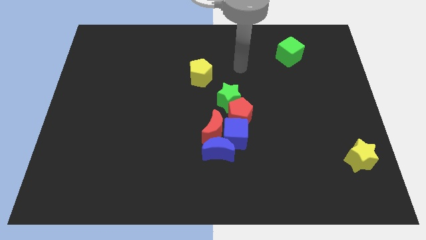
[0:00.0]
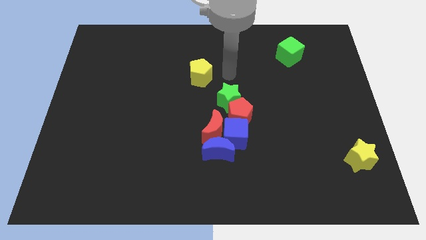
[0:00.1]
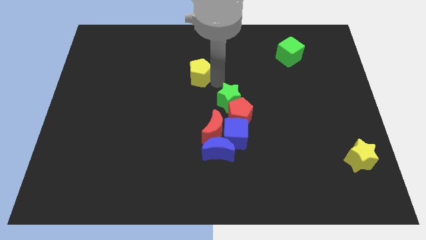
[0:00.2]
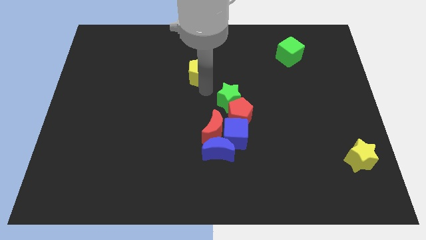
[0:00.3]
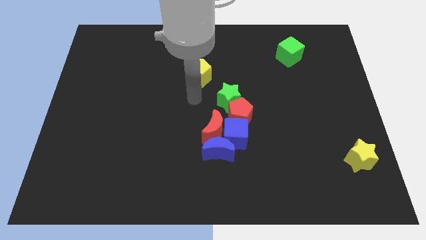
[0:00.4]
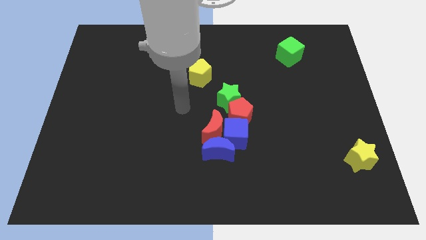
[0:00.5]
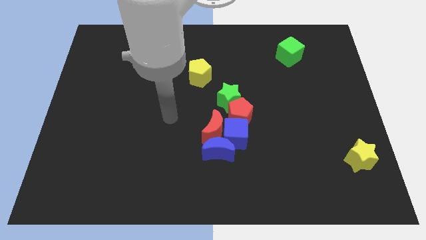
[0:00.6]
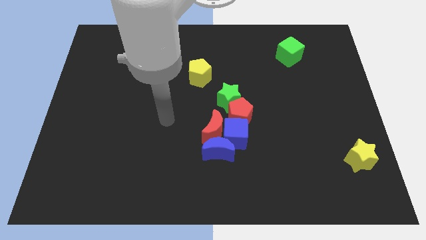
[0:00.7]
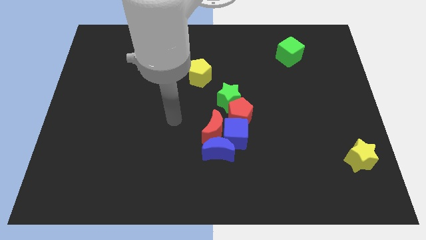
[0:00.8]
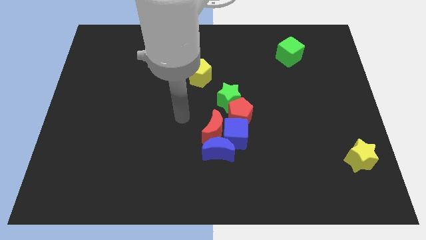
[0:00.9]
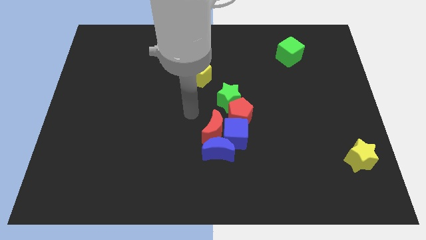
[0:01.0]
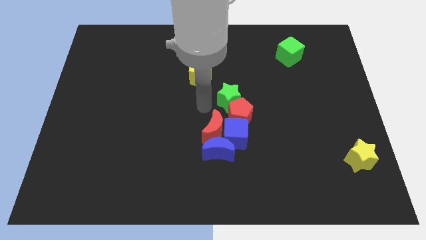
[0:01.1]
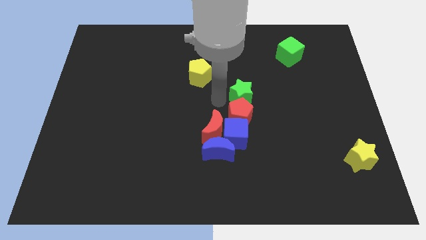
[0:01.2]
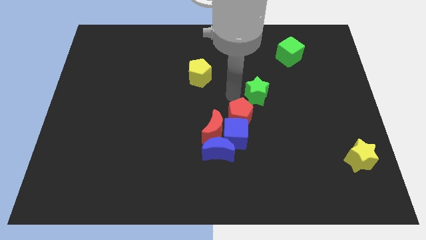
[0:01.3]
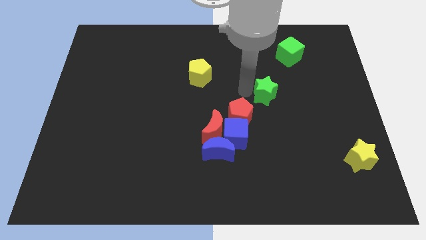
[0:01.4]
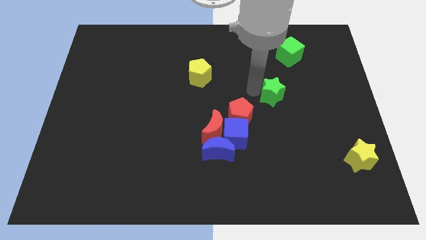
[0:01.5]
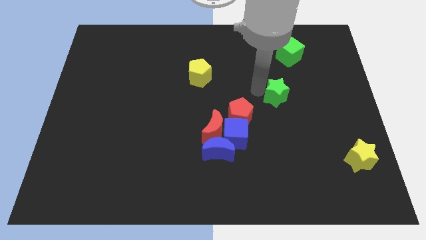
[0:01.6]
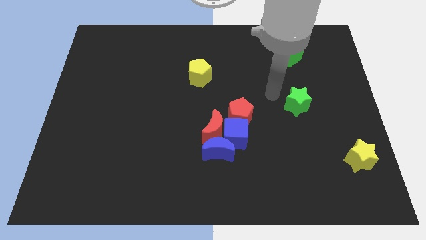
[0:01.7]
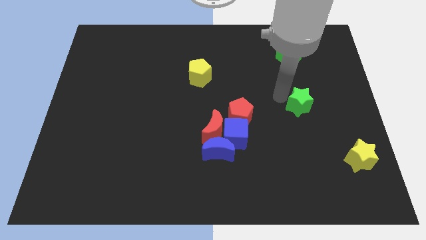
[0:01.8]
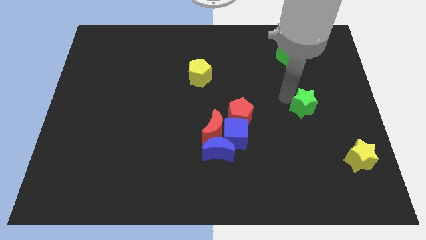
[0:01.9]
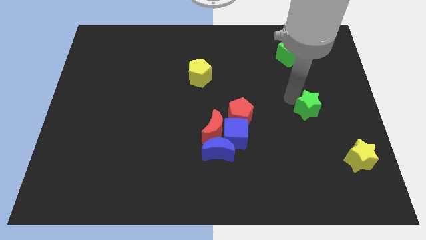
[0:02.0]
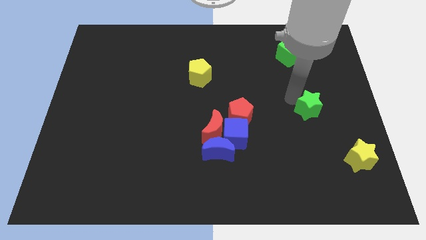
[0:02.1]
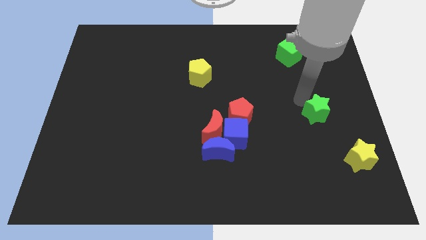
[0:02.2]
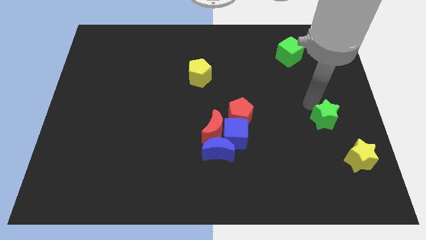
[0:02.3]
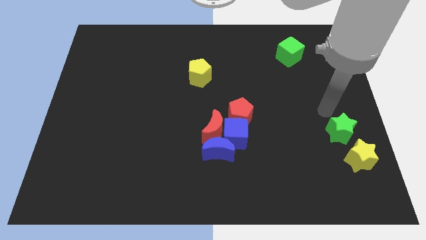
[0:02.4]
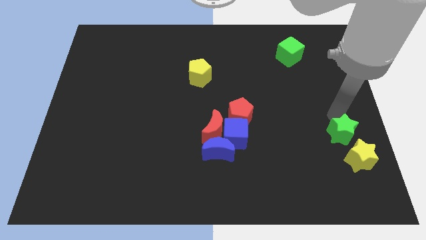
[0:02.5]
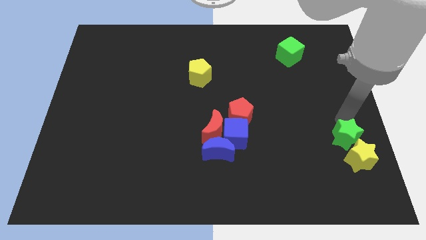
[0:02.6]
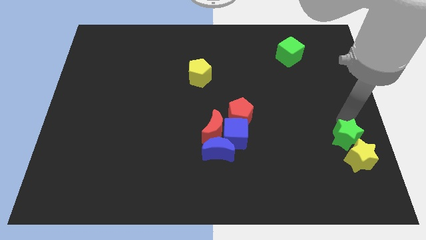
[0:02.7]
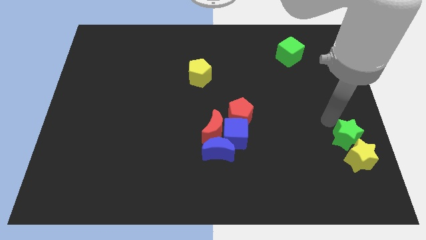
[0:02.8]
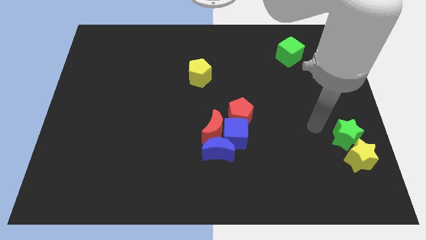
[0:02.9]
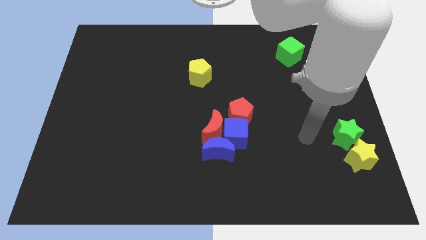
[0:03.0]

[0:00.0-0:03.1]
move the green star close to the yellow star

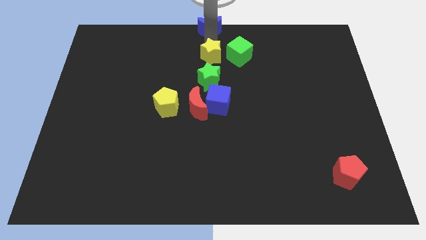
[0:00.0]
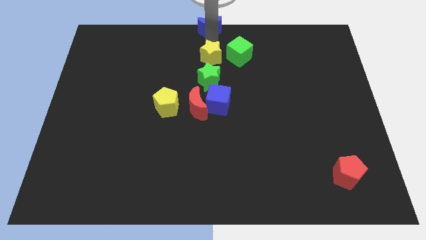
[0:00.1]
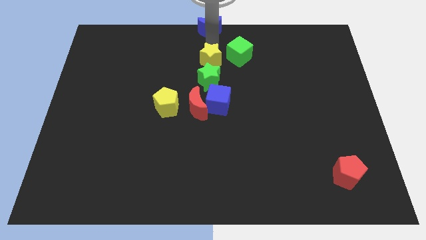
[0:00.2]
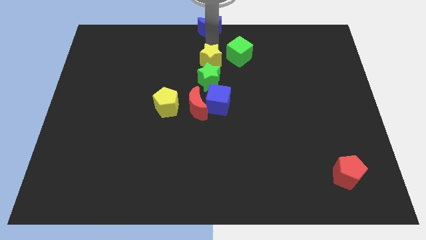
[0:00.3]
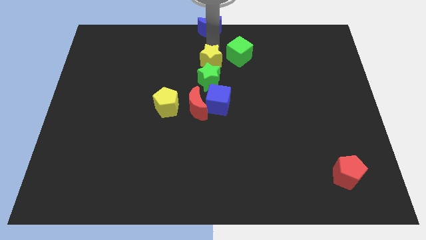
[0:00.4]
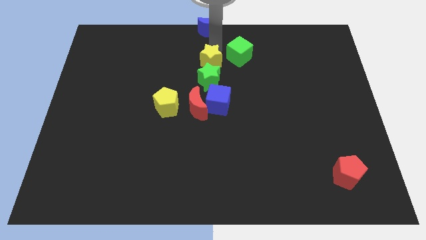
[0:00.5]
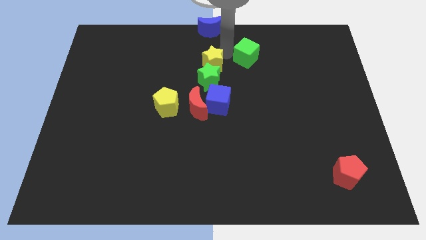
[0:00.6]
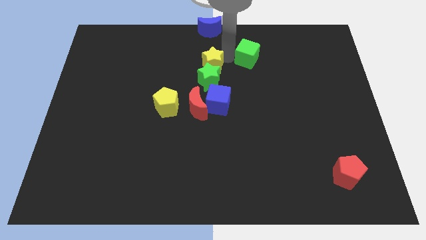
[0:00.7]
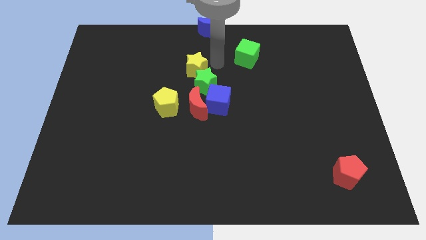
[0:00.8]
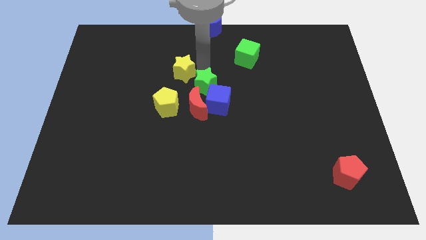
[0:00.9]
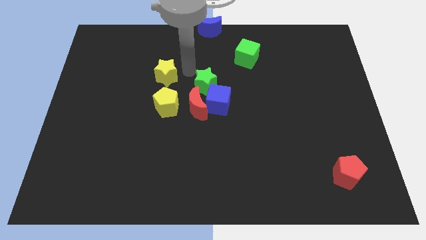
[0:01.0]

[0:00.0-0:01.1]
push the yellow star to the top of yellow pentagon

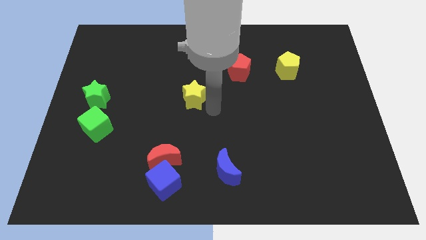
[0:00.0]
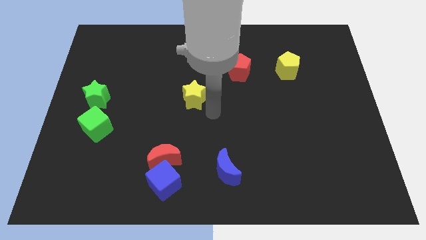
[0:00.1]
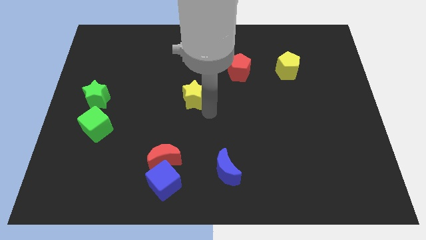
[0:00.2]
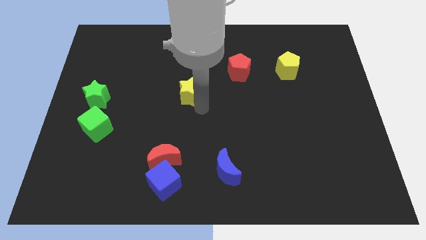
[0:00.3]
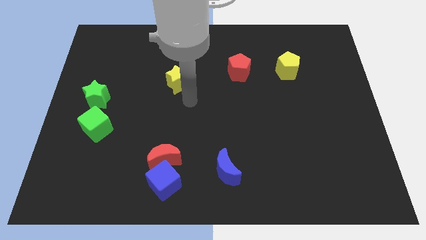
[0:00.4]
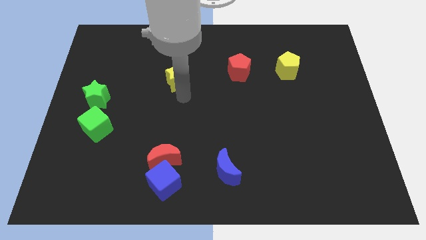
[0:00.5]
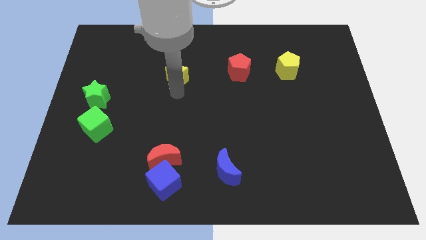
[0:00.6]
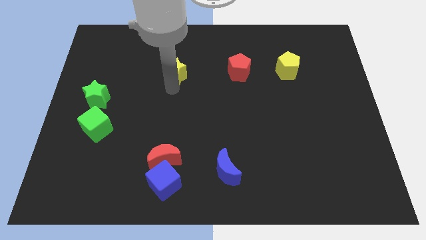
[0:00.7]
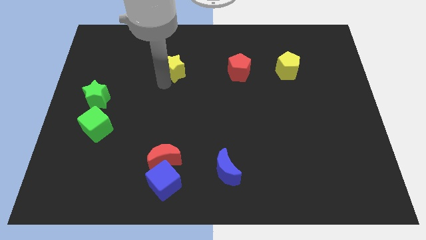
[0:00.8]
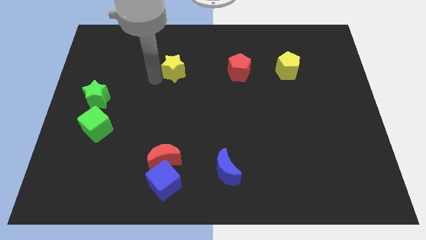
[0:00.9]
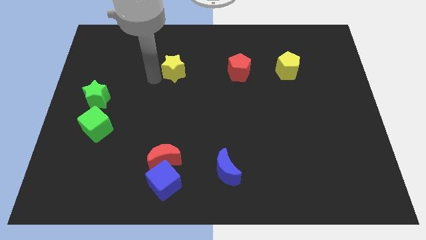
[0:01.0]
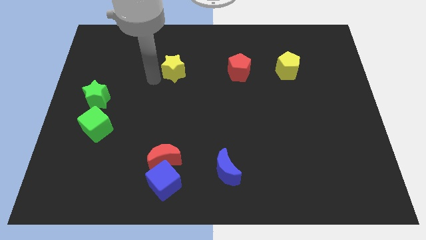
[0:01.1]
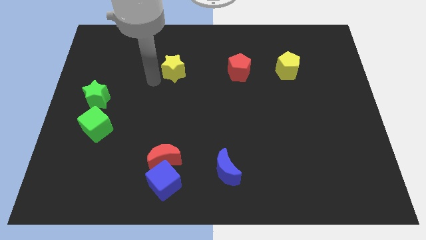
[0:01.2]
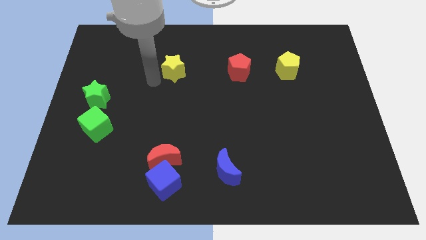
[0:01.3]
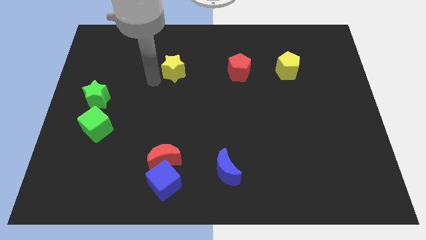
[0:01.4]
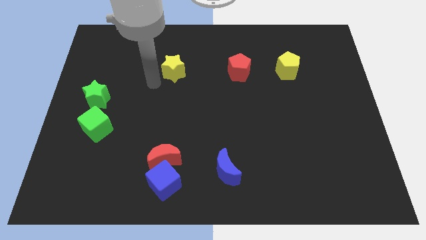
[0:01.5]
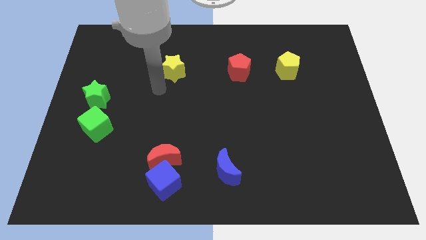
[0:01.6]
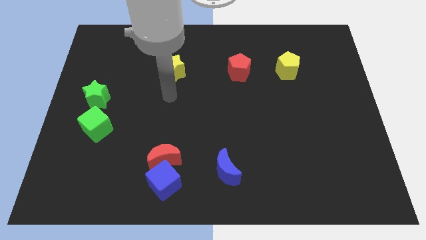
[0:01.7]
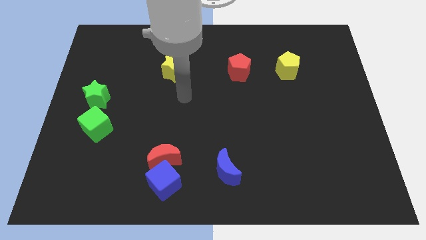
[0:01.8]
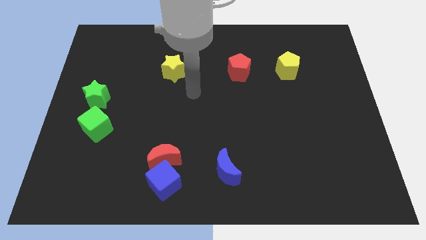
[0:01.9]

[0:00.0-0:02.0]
place the yellow star parallel to red pentagon

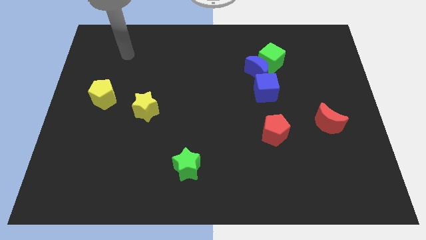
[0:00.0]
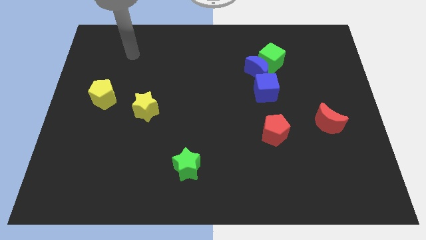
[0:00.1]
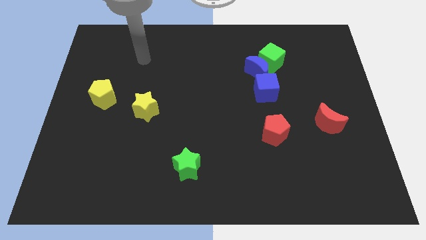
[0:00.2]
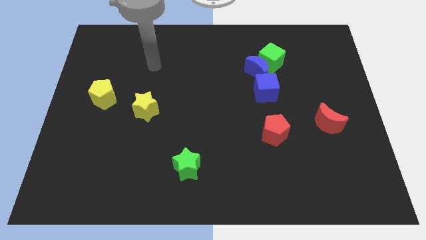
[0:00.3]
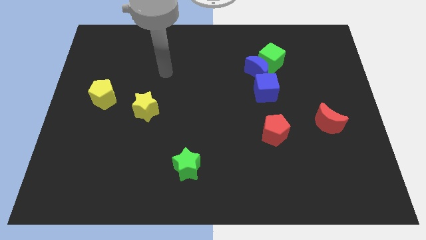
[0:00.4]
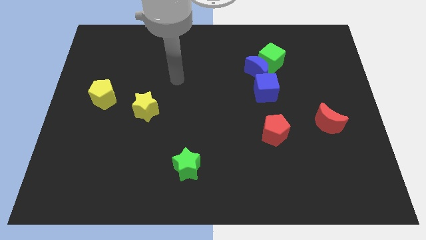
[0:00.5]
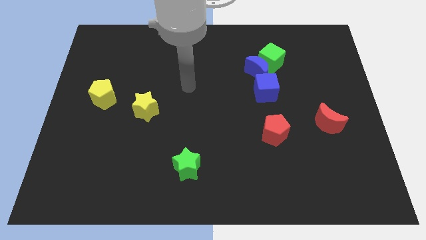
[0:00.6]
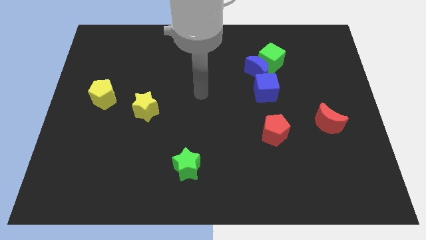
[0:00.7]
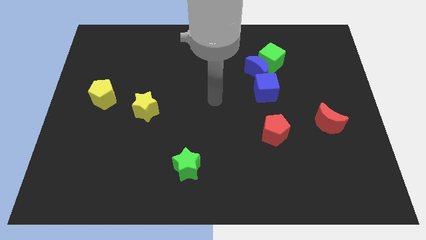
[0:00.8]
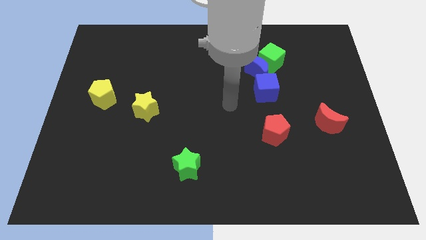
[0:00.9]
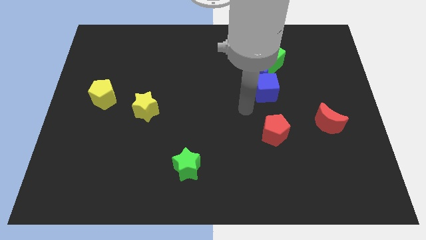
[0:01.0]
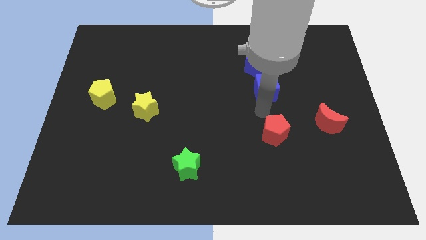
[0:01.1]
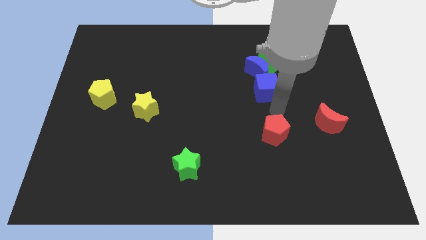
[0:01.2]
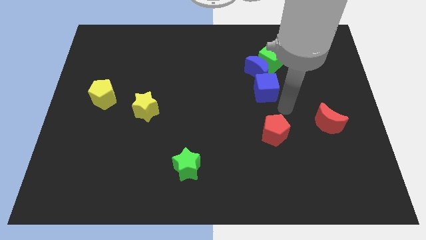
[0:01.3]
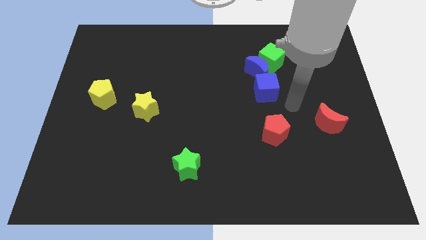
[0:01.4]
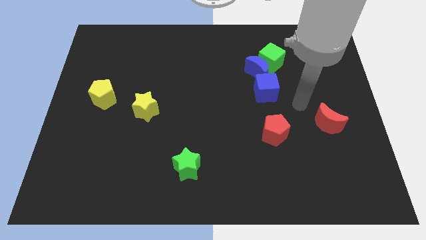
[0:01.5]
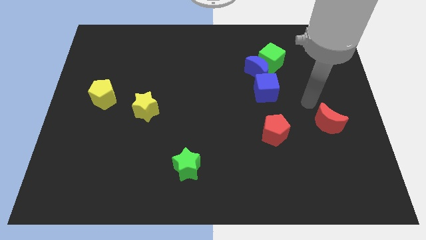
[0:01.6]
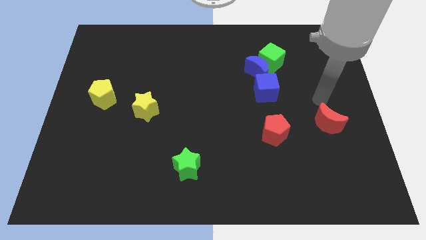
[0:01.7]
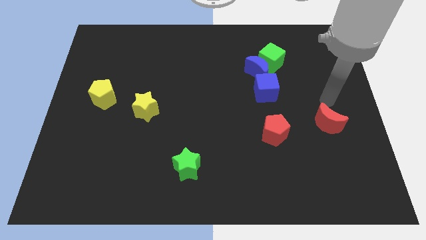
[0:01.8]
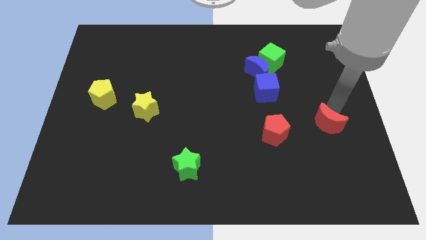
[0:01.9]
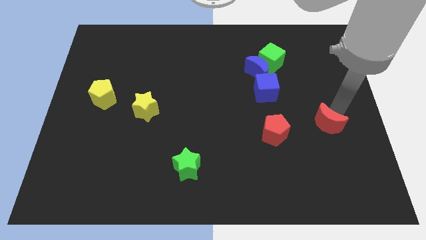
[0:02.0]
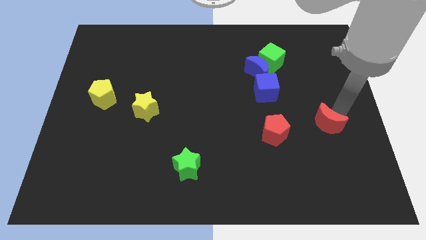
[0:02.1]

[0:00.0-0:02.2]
point the arm above the red moon

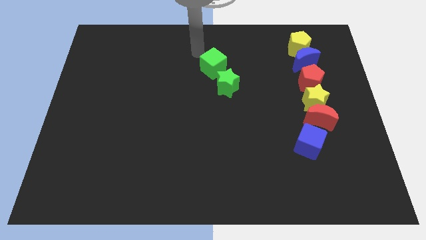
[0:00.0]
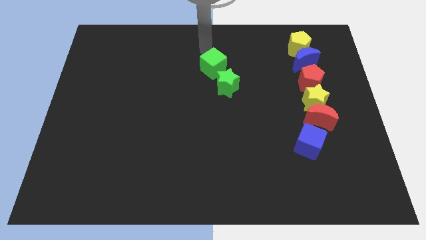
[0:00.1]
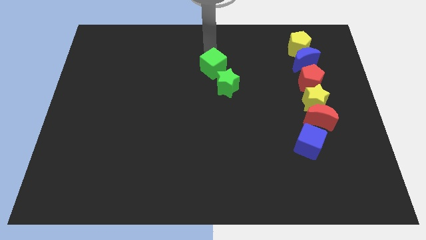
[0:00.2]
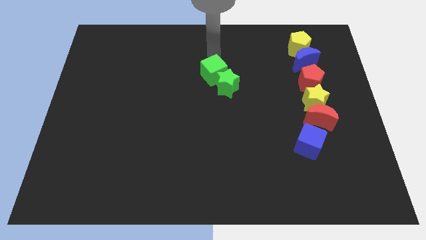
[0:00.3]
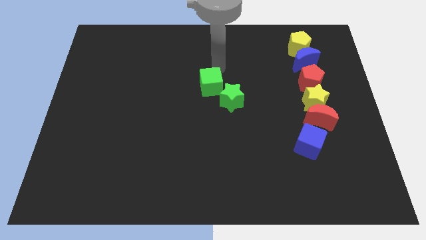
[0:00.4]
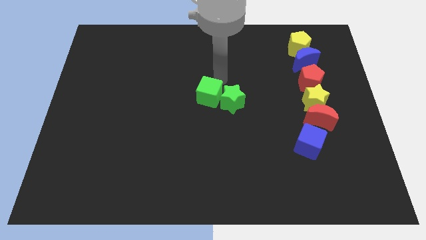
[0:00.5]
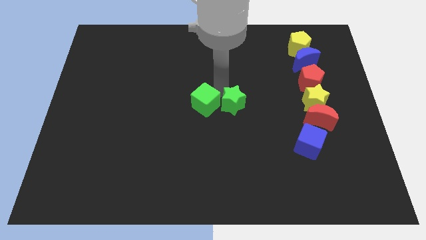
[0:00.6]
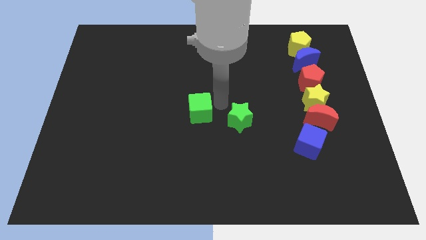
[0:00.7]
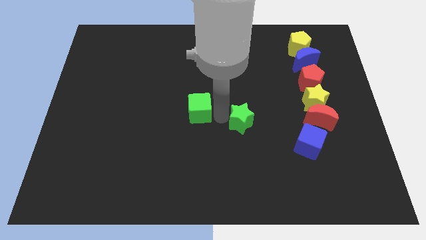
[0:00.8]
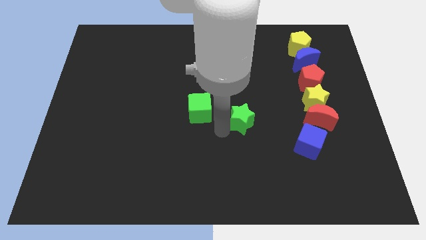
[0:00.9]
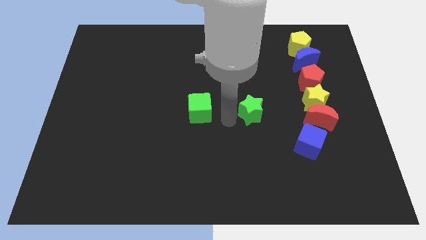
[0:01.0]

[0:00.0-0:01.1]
place your hand in between green blocks
